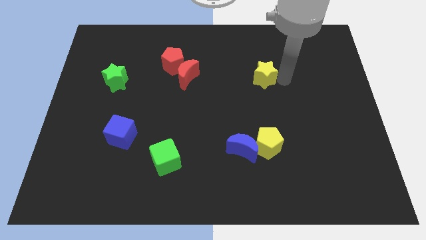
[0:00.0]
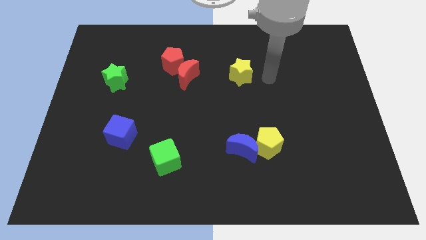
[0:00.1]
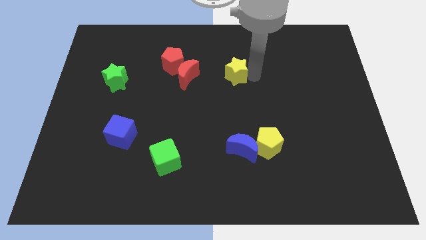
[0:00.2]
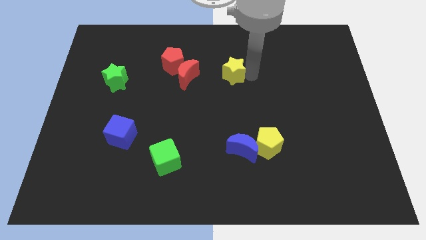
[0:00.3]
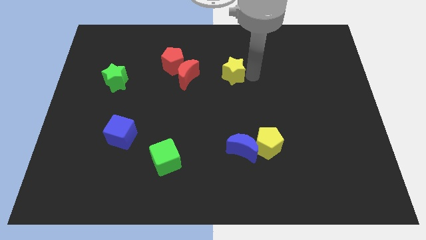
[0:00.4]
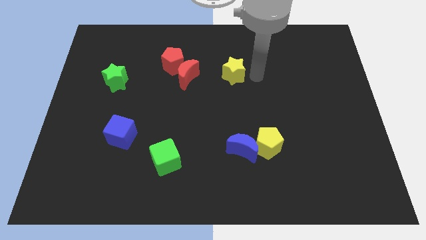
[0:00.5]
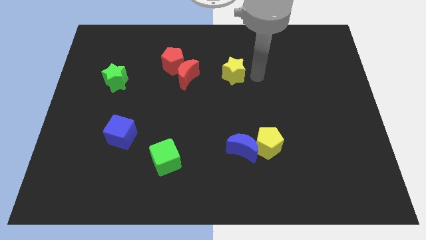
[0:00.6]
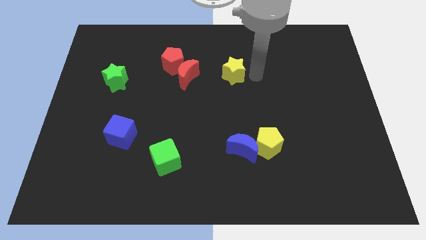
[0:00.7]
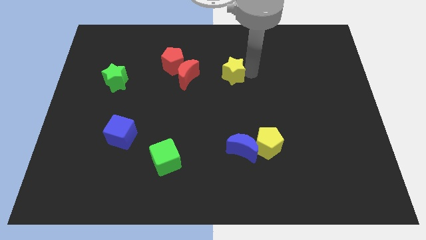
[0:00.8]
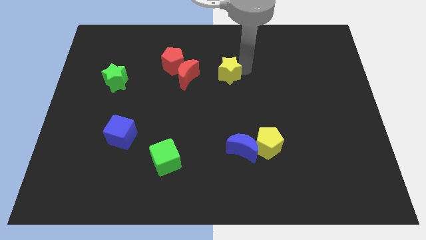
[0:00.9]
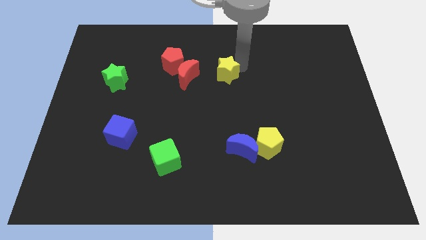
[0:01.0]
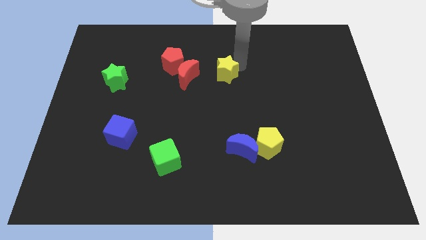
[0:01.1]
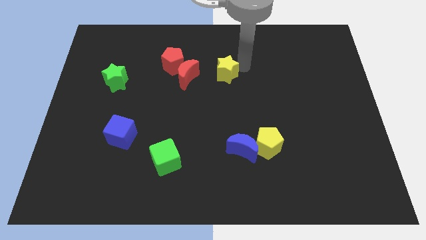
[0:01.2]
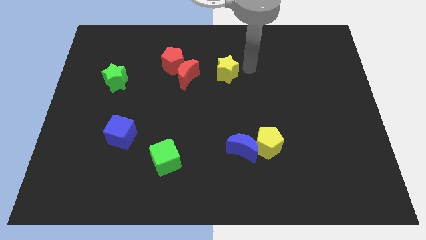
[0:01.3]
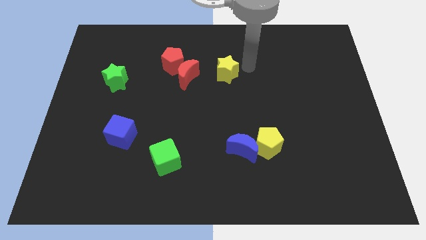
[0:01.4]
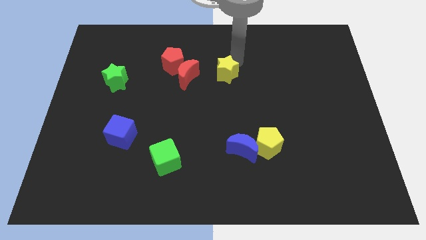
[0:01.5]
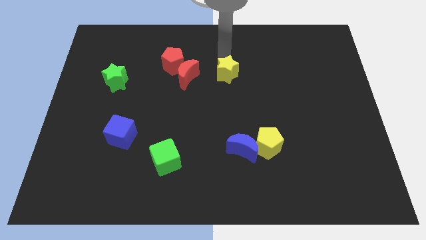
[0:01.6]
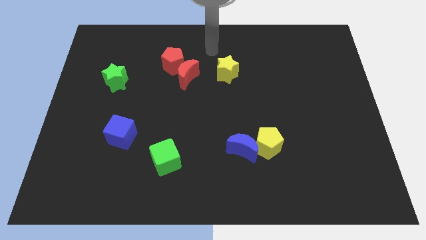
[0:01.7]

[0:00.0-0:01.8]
push the yellow star to the right side of the red moon

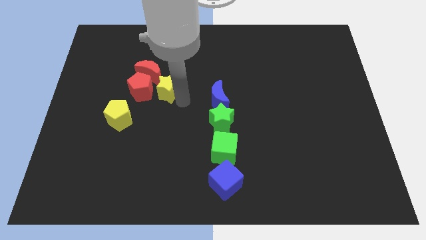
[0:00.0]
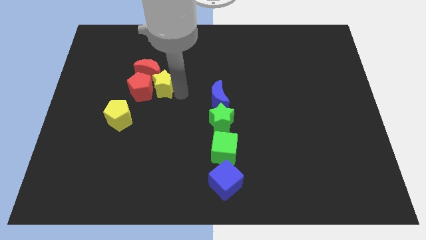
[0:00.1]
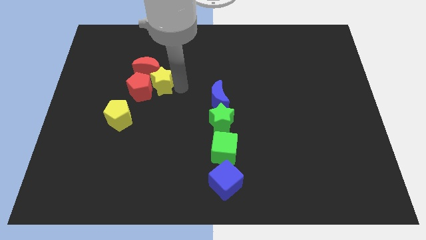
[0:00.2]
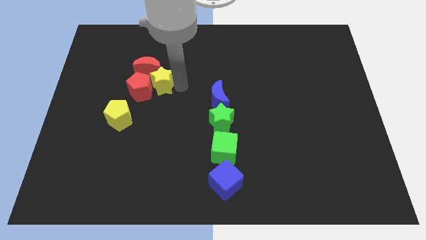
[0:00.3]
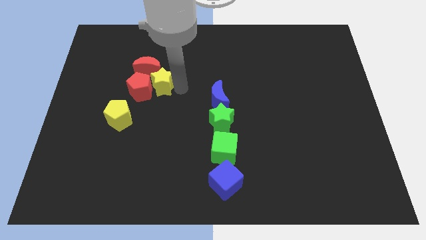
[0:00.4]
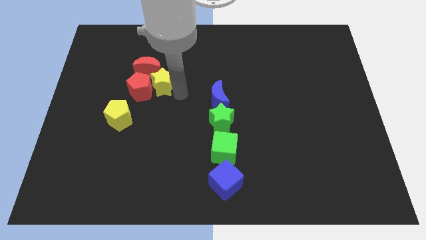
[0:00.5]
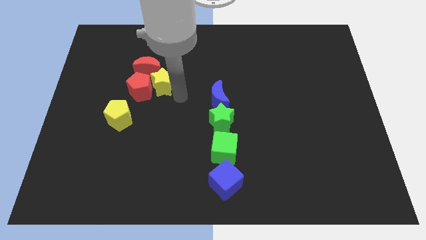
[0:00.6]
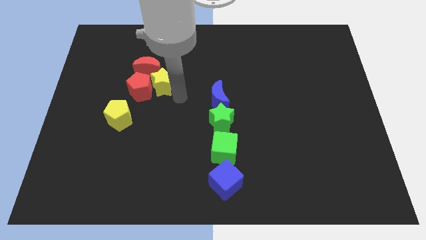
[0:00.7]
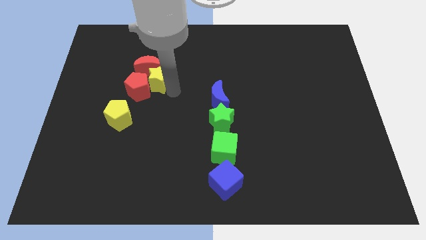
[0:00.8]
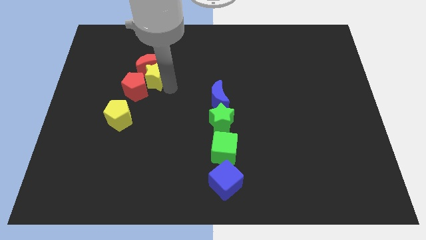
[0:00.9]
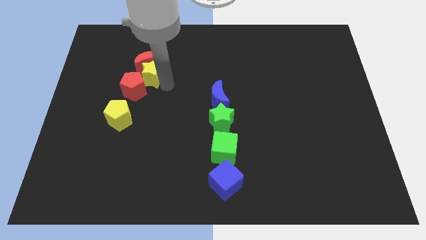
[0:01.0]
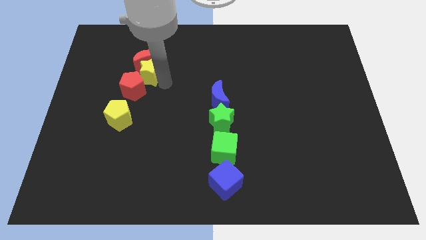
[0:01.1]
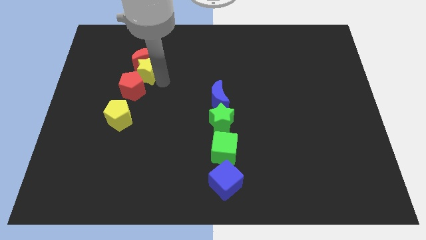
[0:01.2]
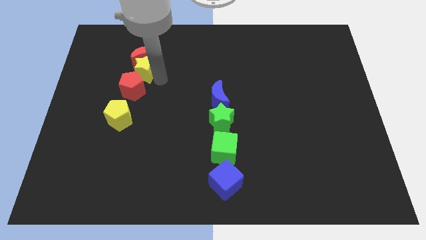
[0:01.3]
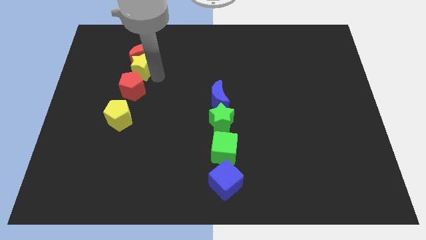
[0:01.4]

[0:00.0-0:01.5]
move the yellow star in between the blue crescent and red pentagon

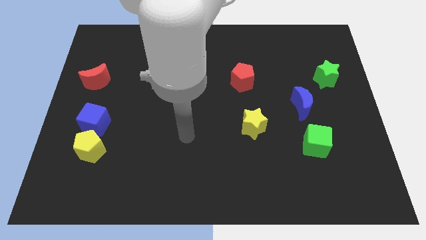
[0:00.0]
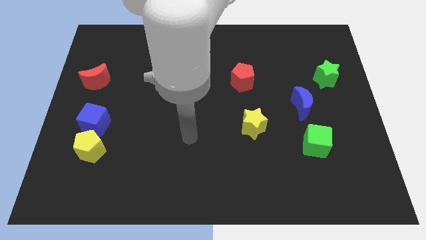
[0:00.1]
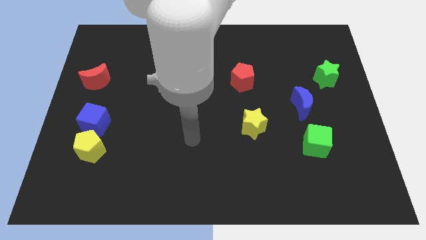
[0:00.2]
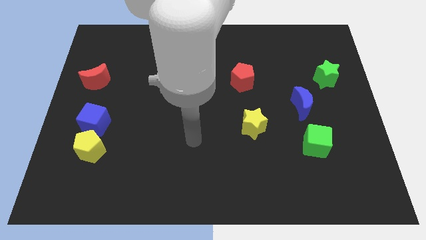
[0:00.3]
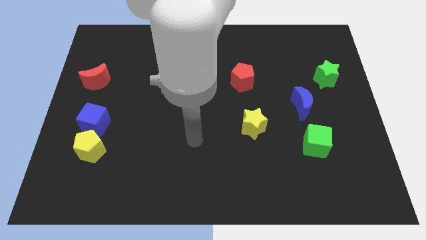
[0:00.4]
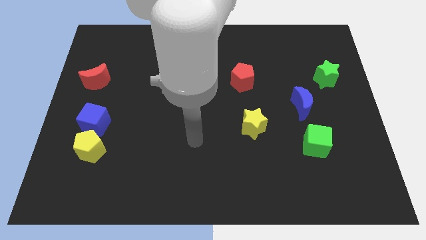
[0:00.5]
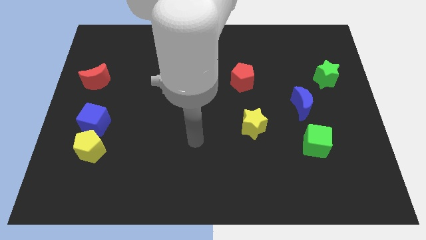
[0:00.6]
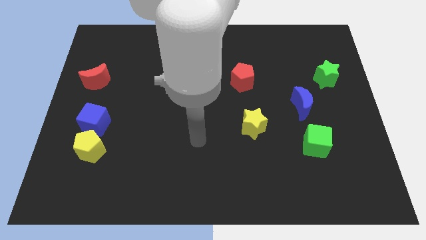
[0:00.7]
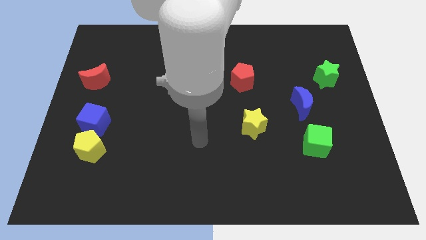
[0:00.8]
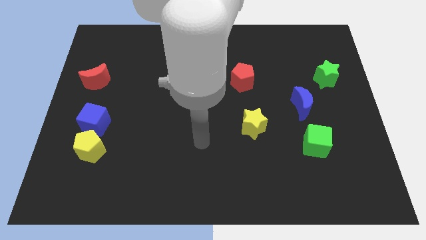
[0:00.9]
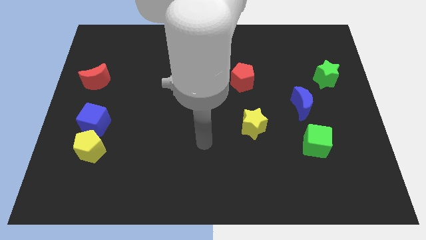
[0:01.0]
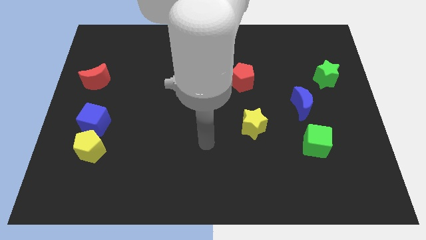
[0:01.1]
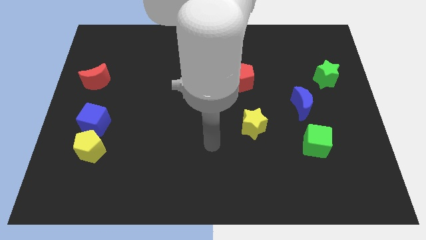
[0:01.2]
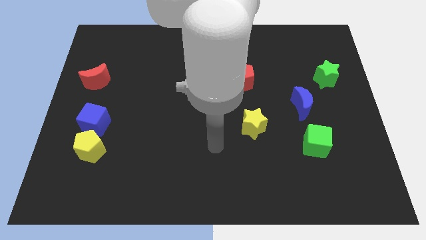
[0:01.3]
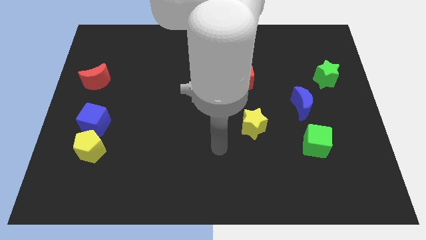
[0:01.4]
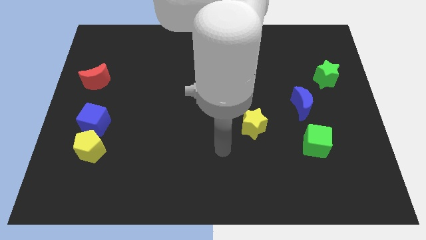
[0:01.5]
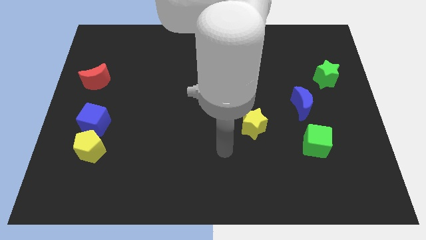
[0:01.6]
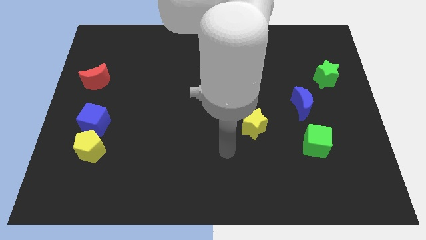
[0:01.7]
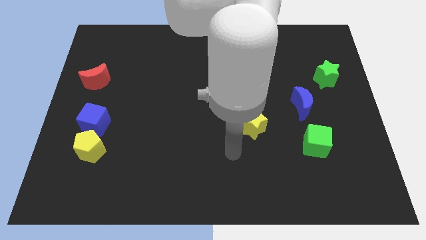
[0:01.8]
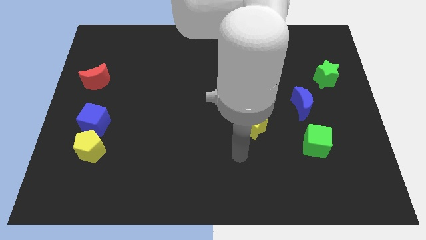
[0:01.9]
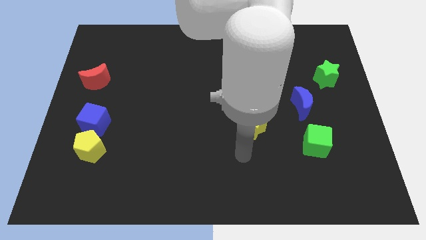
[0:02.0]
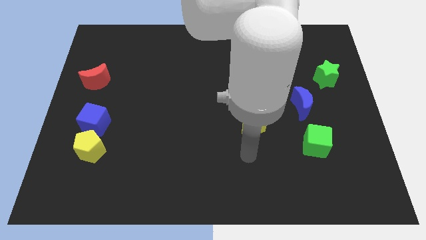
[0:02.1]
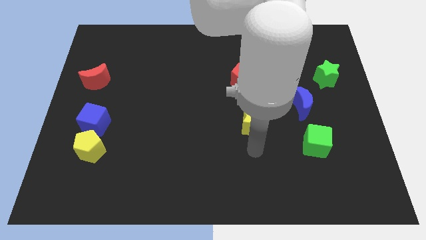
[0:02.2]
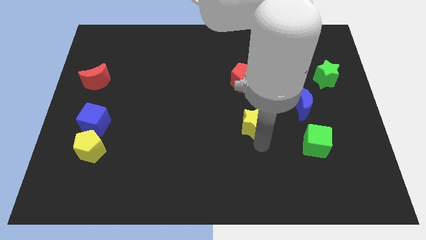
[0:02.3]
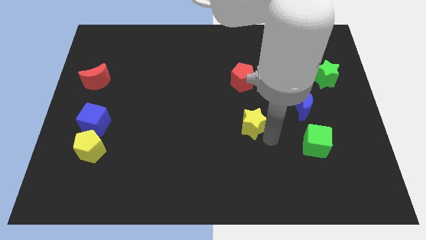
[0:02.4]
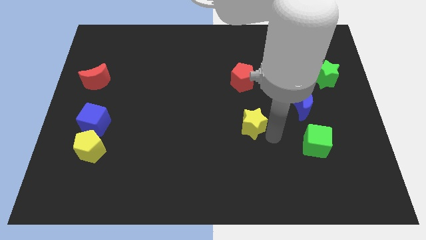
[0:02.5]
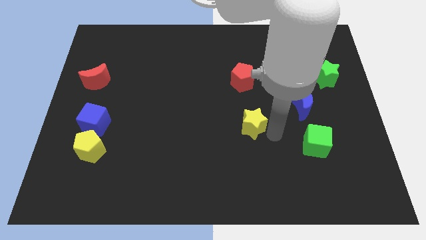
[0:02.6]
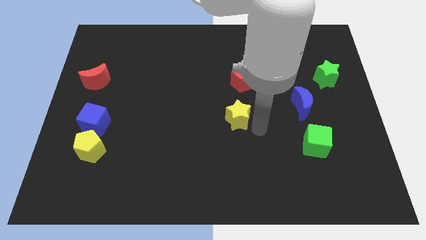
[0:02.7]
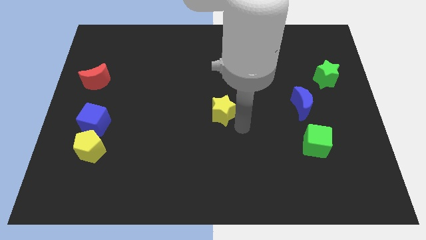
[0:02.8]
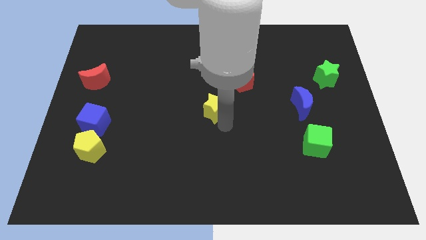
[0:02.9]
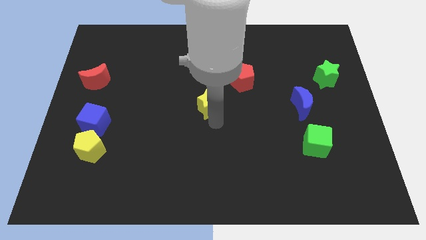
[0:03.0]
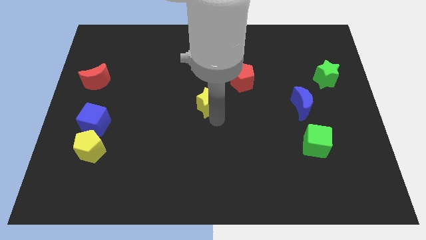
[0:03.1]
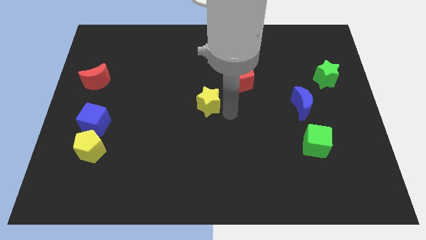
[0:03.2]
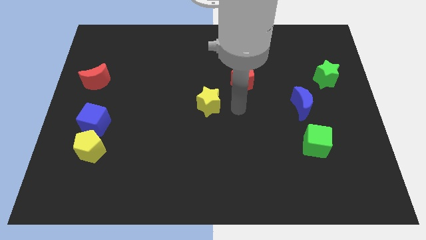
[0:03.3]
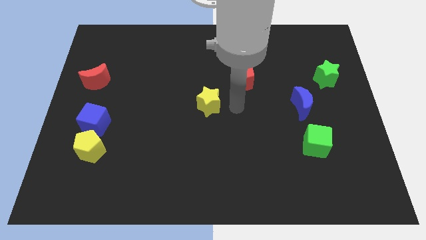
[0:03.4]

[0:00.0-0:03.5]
place the yellow star digonally to the red pentagon

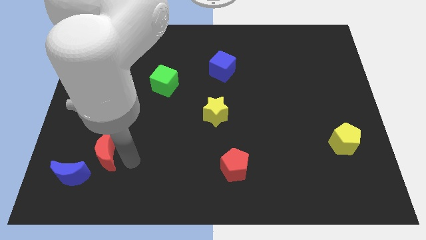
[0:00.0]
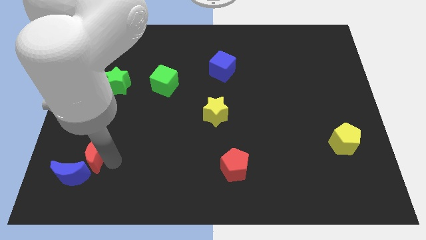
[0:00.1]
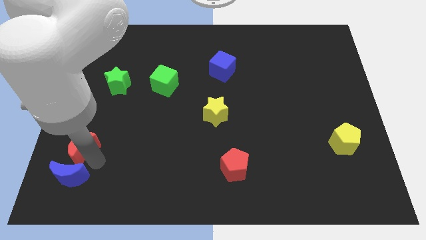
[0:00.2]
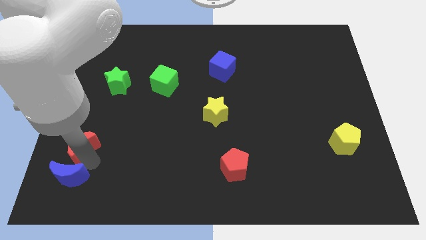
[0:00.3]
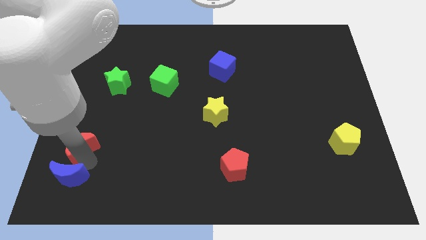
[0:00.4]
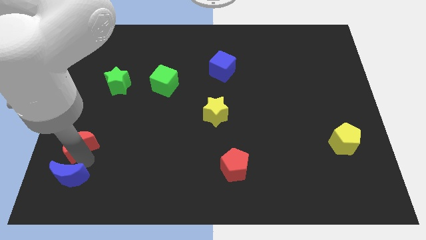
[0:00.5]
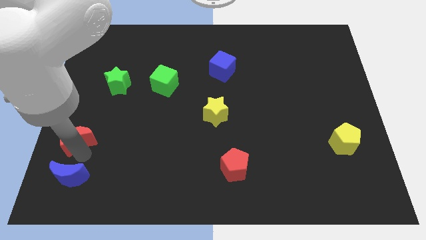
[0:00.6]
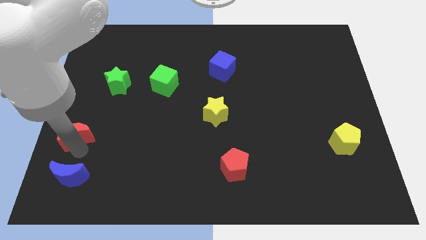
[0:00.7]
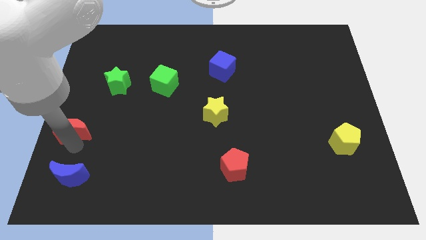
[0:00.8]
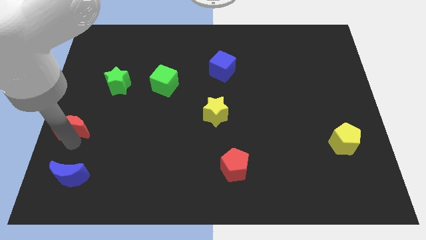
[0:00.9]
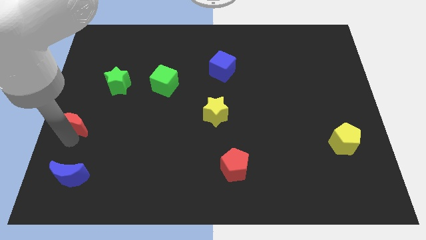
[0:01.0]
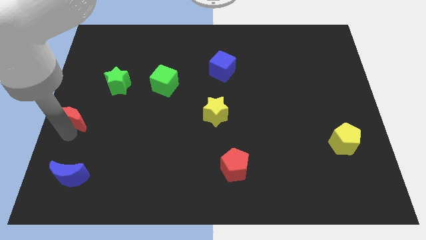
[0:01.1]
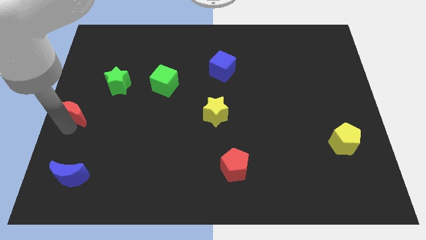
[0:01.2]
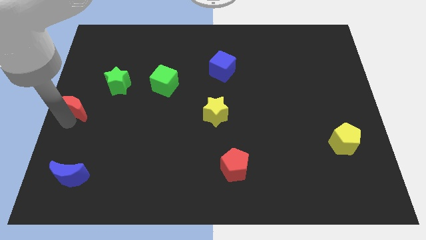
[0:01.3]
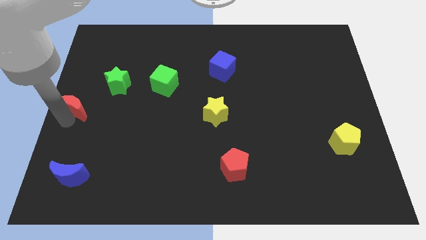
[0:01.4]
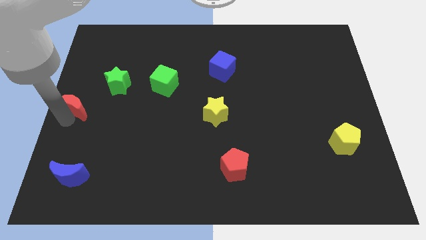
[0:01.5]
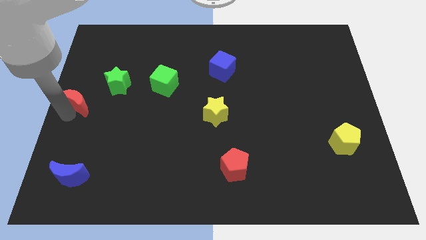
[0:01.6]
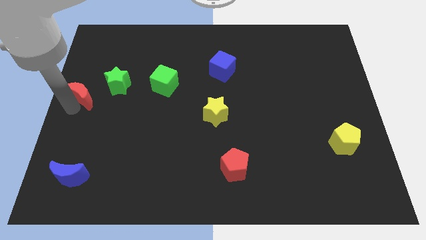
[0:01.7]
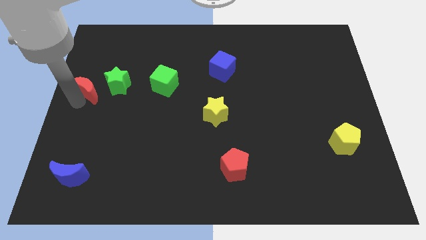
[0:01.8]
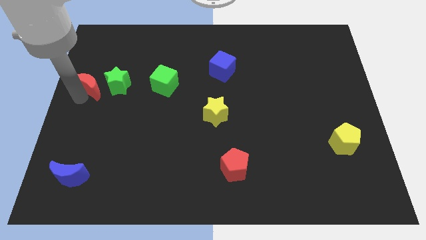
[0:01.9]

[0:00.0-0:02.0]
move the red crescent to the left of green star
